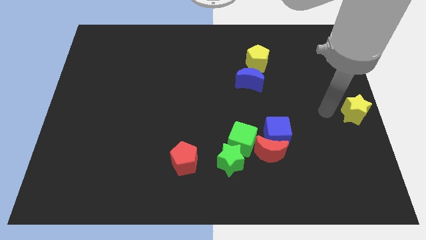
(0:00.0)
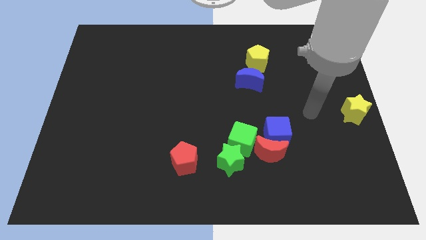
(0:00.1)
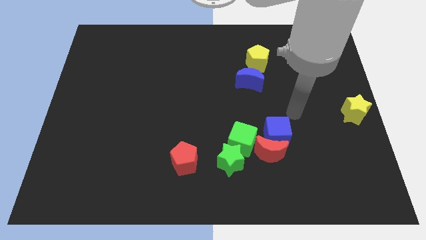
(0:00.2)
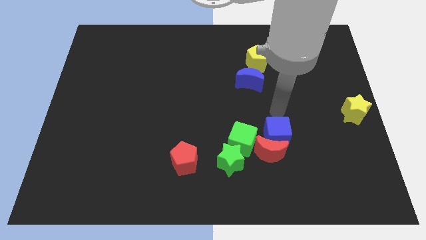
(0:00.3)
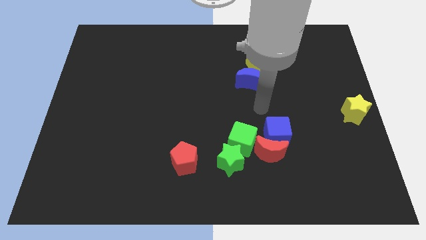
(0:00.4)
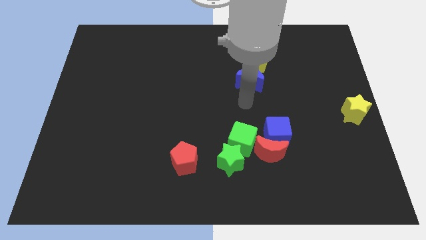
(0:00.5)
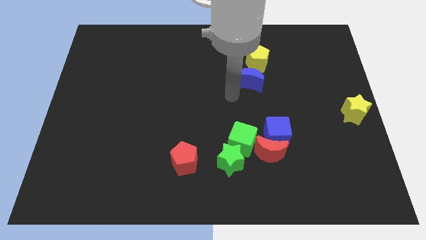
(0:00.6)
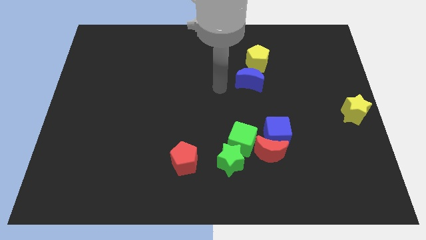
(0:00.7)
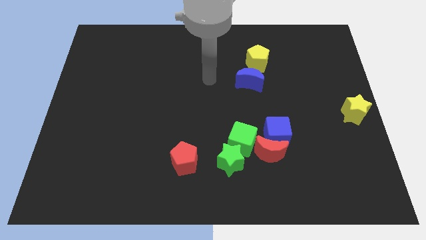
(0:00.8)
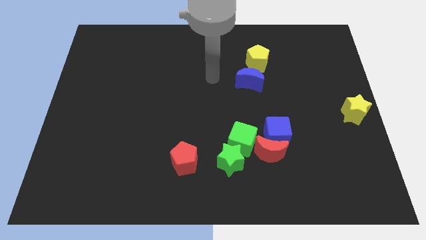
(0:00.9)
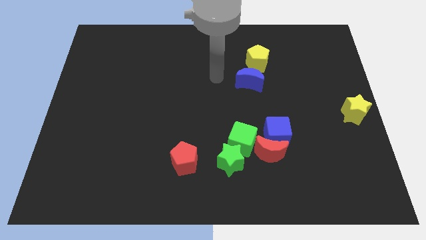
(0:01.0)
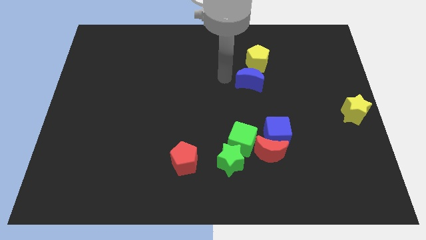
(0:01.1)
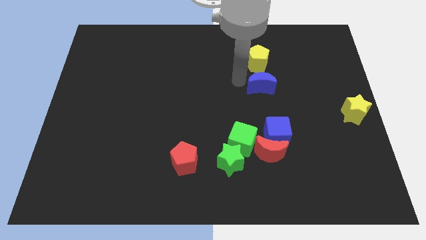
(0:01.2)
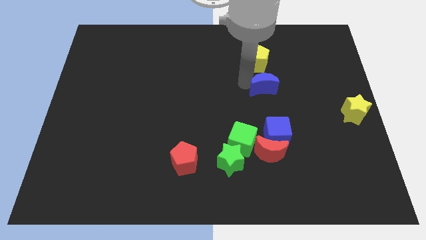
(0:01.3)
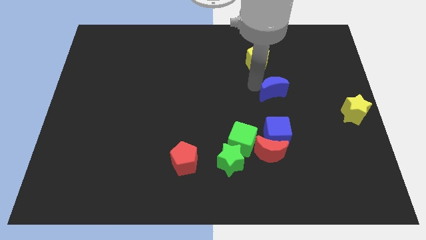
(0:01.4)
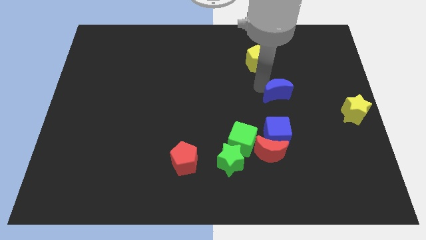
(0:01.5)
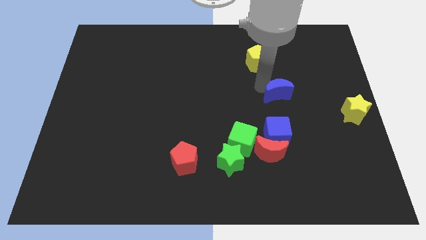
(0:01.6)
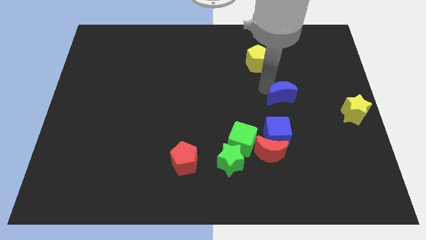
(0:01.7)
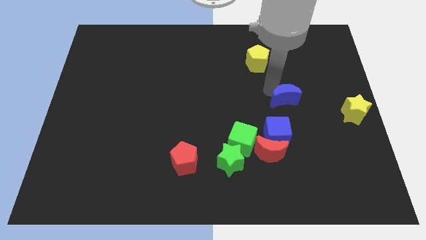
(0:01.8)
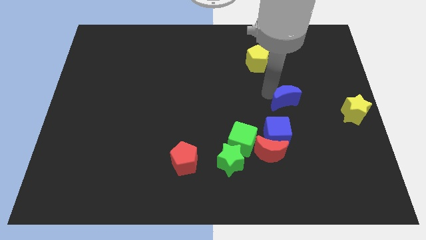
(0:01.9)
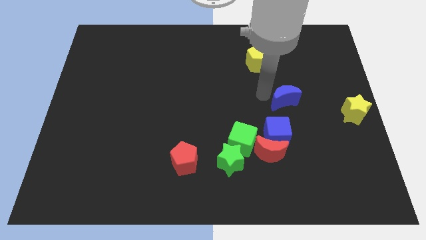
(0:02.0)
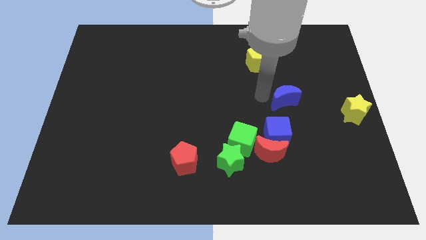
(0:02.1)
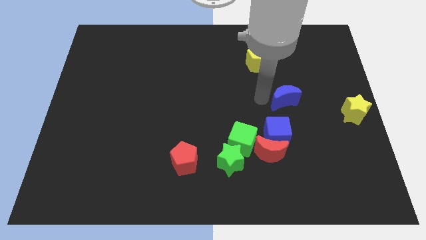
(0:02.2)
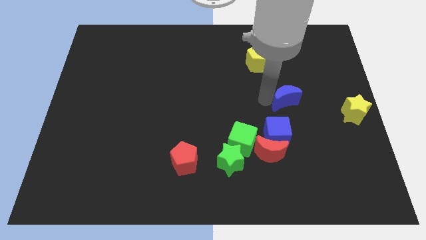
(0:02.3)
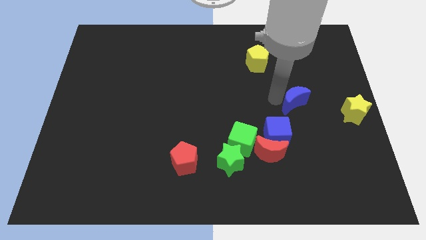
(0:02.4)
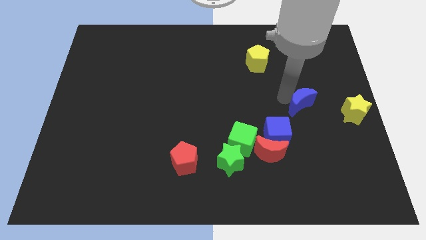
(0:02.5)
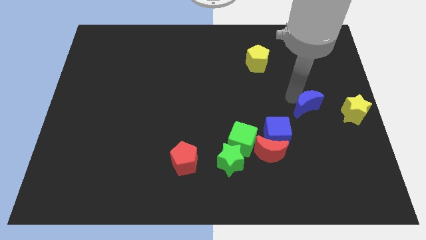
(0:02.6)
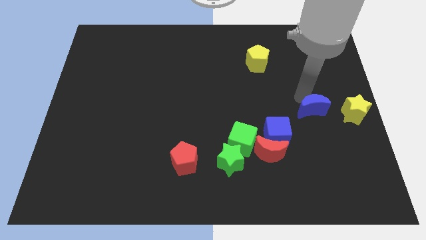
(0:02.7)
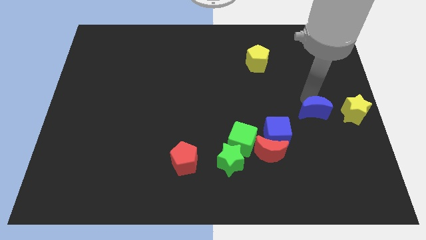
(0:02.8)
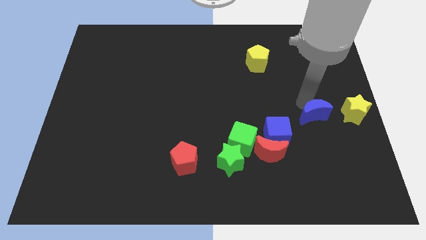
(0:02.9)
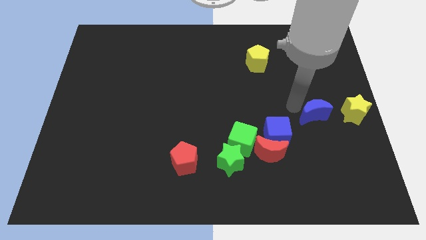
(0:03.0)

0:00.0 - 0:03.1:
push the blue crescen towards the left side of the yellow star

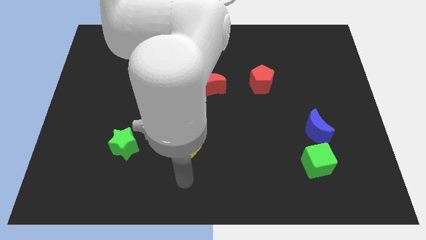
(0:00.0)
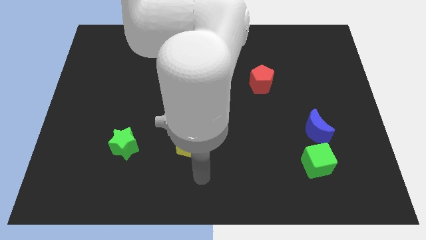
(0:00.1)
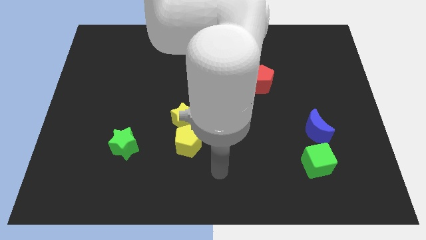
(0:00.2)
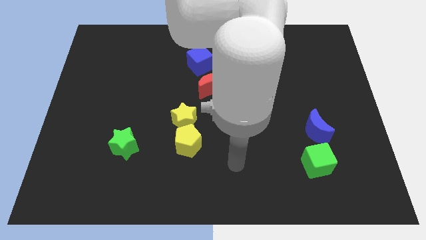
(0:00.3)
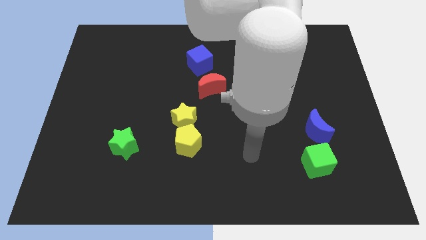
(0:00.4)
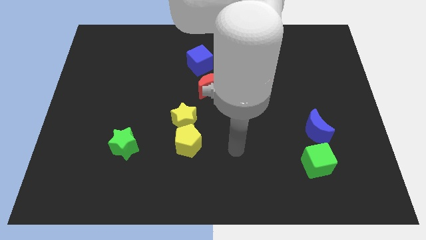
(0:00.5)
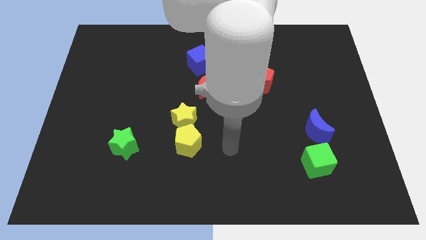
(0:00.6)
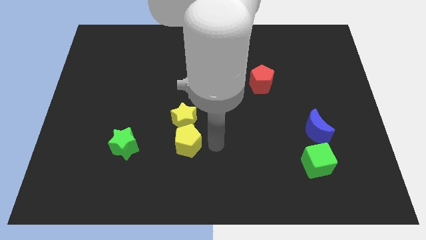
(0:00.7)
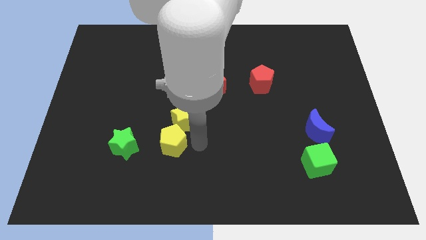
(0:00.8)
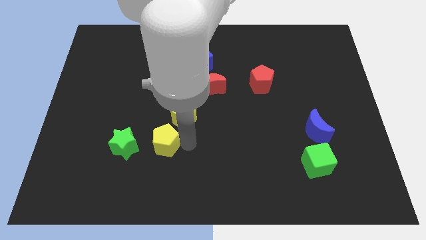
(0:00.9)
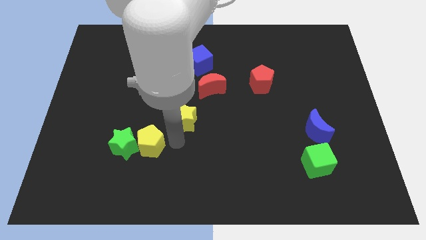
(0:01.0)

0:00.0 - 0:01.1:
push the yellow pentagon towards the left side of the board

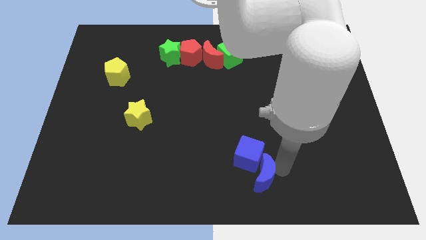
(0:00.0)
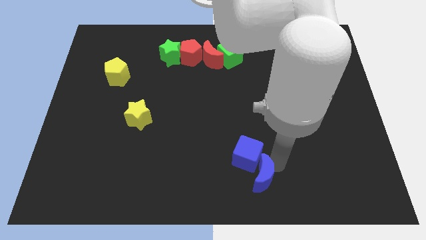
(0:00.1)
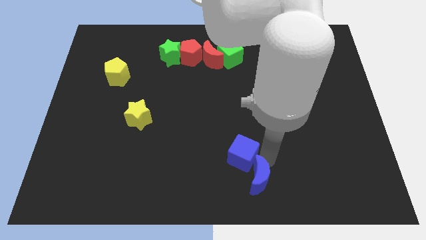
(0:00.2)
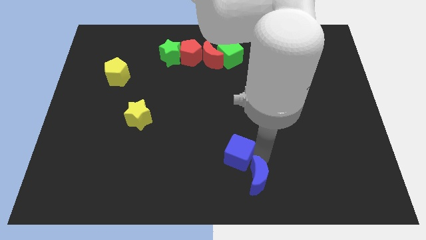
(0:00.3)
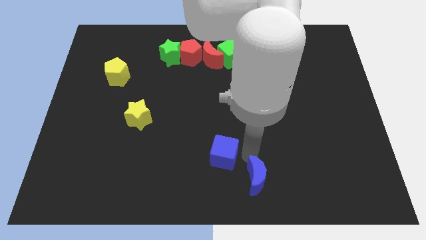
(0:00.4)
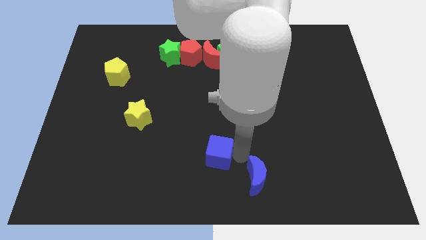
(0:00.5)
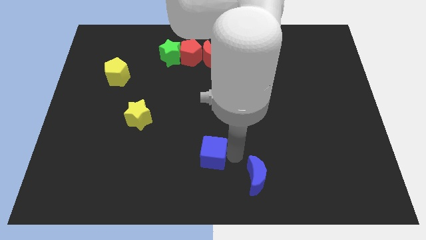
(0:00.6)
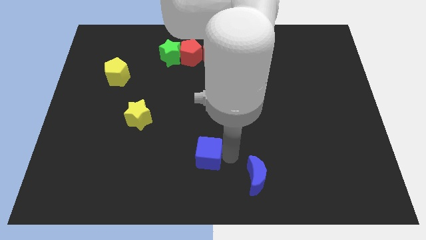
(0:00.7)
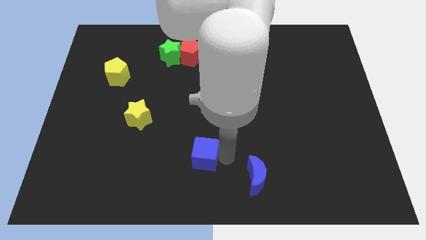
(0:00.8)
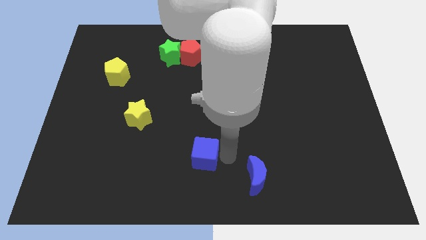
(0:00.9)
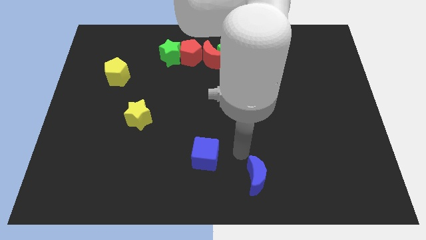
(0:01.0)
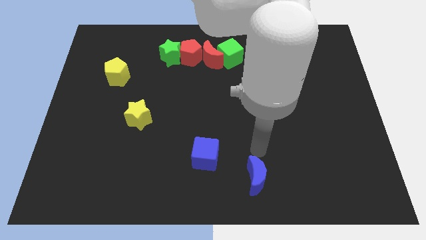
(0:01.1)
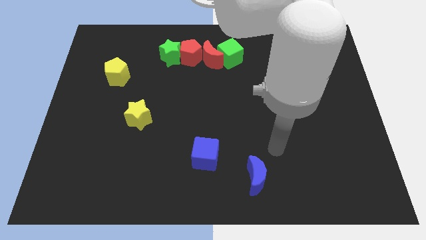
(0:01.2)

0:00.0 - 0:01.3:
separate the blue cube from the blue crescent

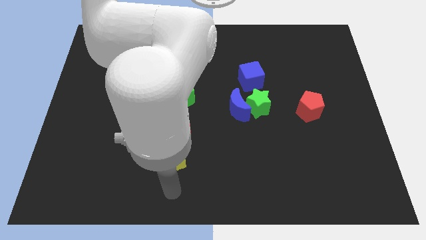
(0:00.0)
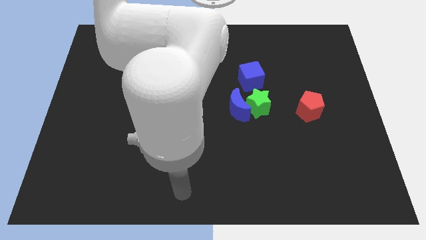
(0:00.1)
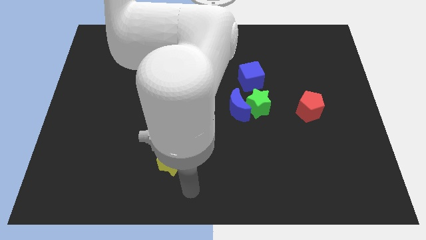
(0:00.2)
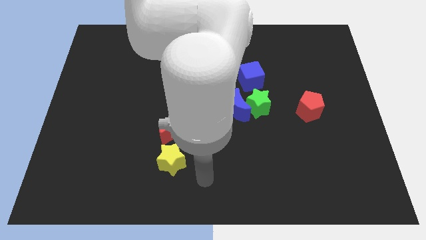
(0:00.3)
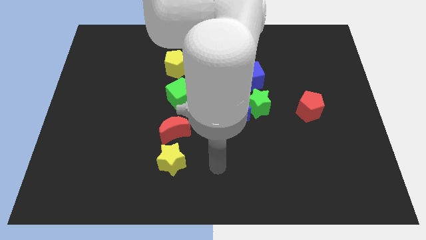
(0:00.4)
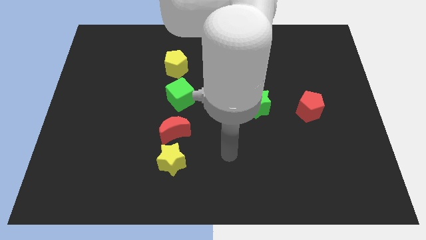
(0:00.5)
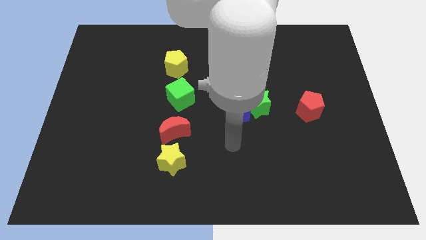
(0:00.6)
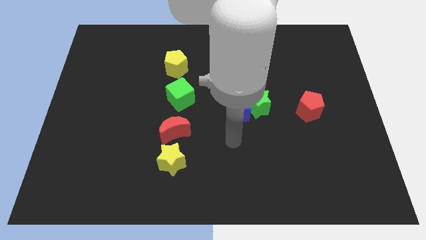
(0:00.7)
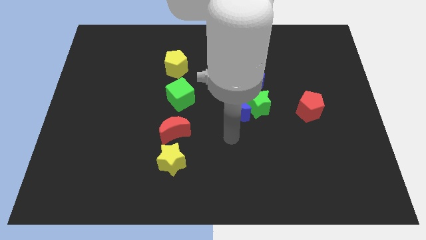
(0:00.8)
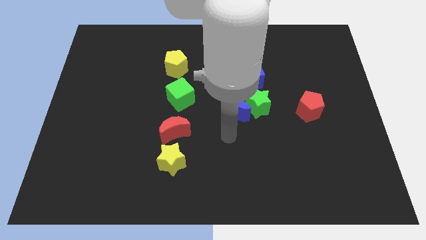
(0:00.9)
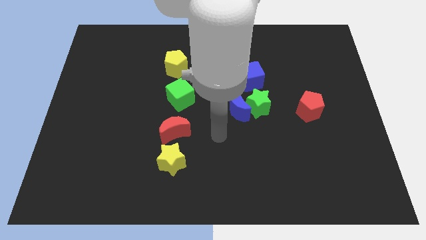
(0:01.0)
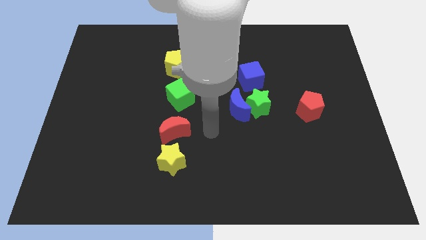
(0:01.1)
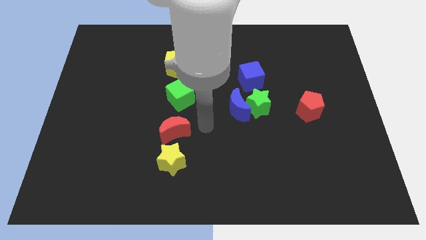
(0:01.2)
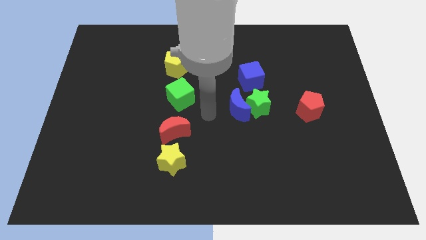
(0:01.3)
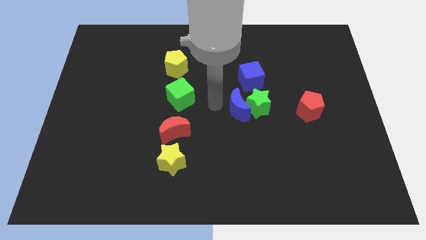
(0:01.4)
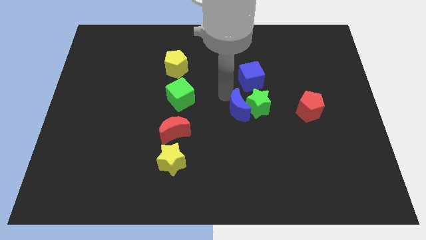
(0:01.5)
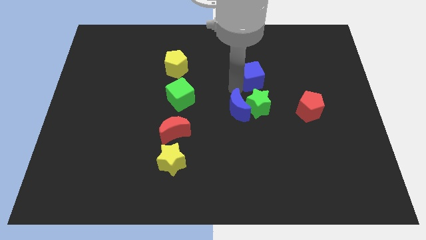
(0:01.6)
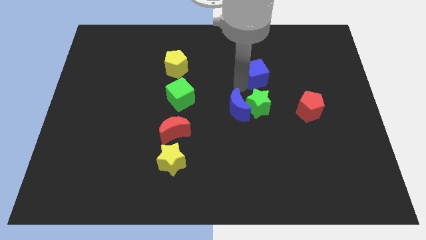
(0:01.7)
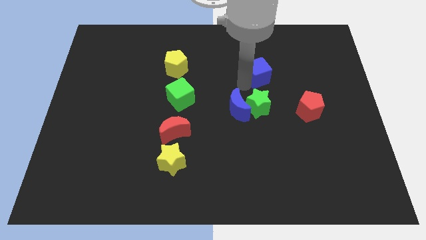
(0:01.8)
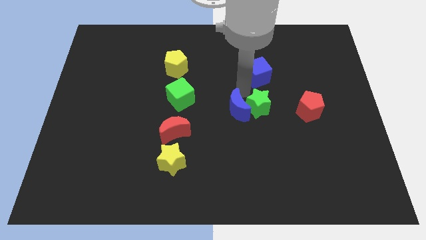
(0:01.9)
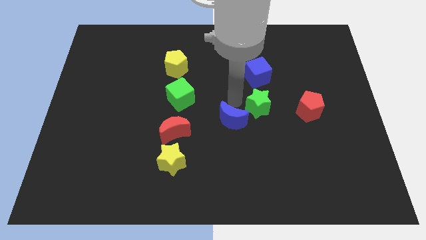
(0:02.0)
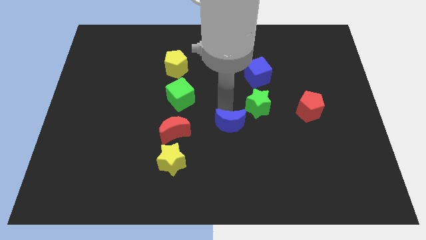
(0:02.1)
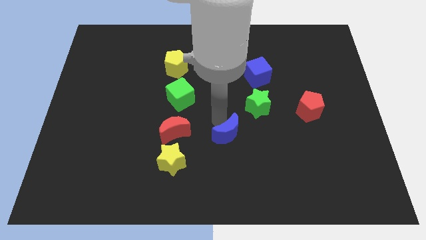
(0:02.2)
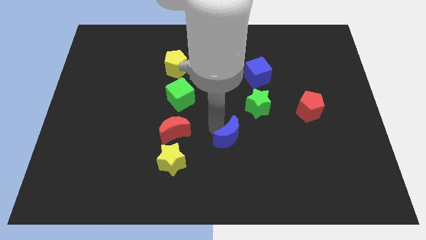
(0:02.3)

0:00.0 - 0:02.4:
separate the blue blocks from green star

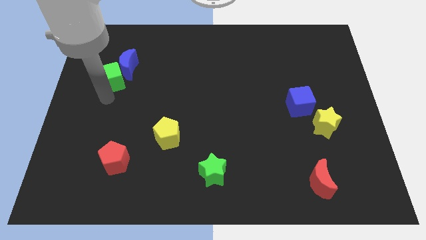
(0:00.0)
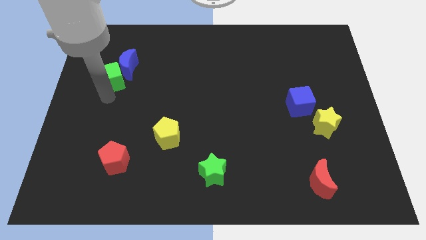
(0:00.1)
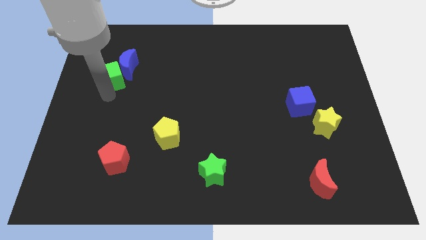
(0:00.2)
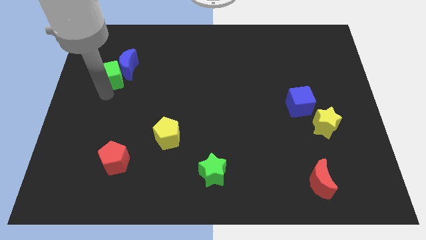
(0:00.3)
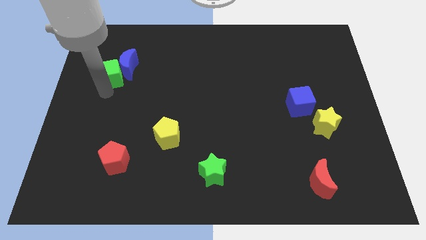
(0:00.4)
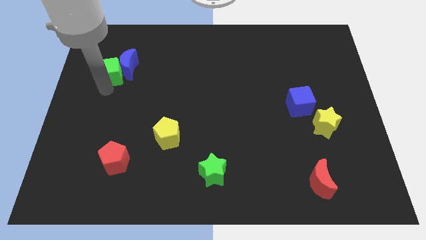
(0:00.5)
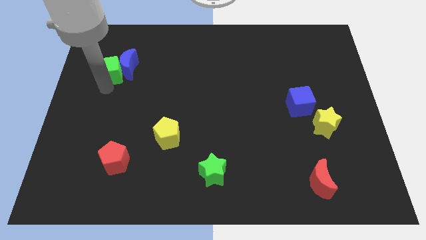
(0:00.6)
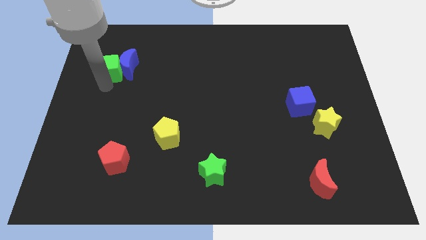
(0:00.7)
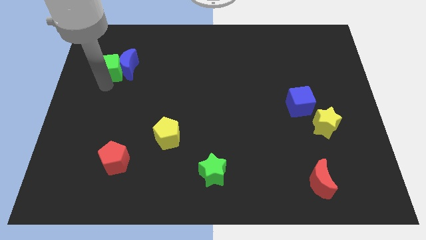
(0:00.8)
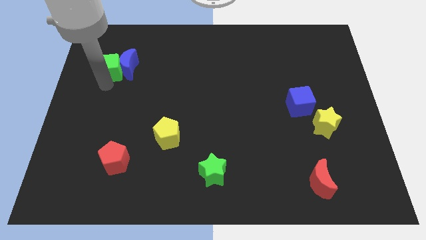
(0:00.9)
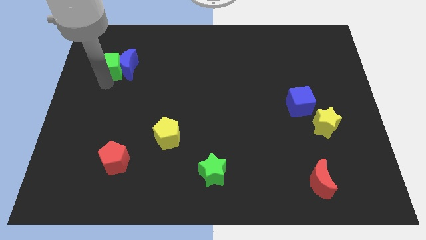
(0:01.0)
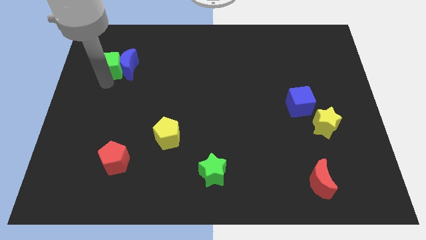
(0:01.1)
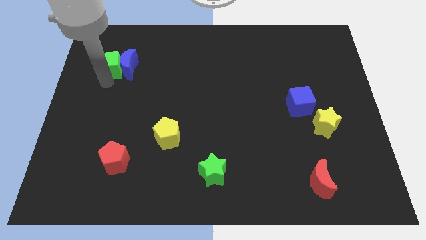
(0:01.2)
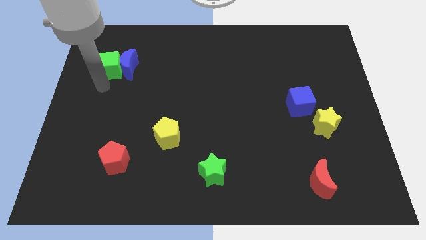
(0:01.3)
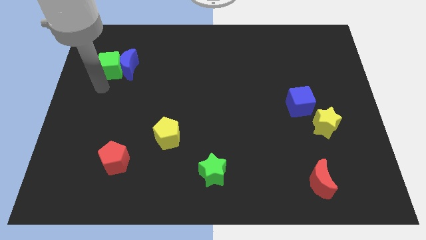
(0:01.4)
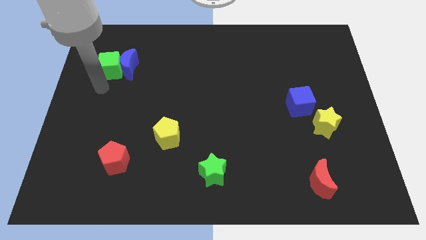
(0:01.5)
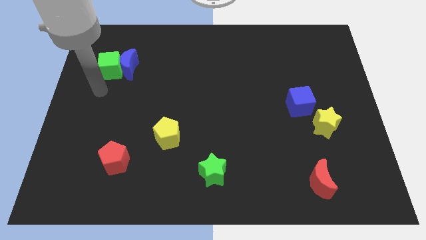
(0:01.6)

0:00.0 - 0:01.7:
place the green cube left to the blue crescent
